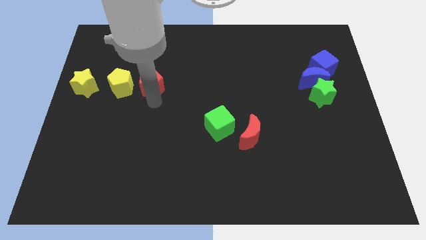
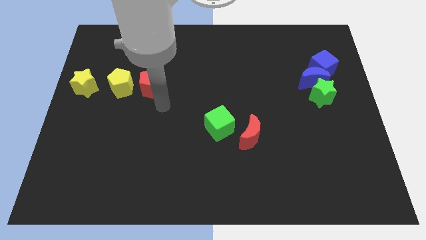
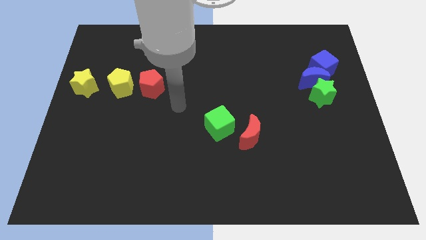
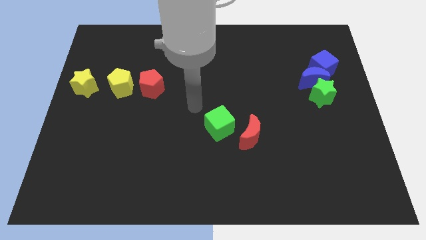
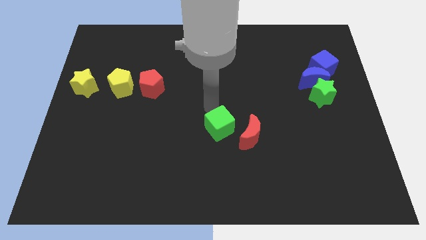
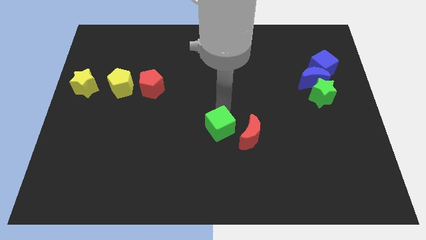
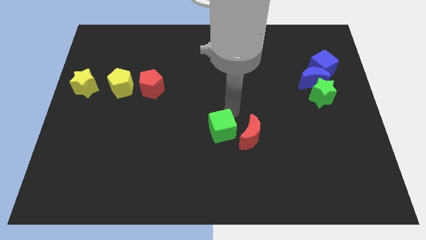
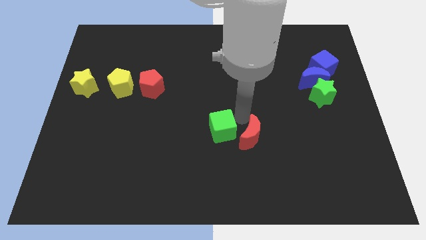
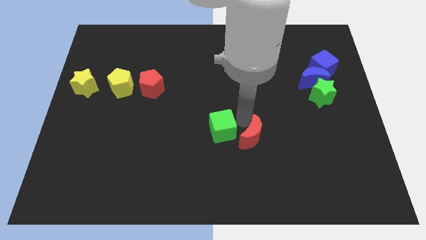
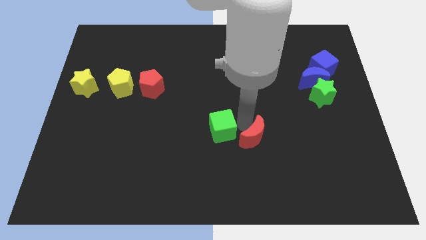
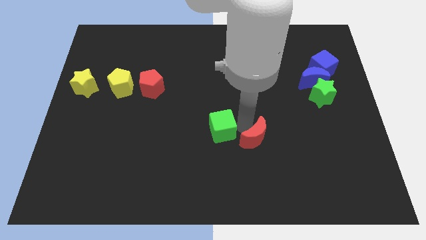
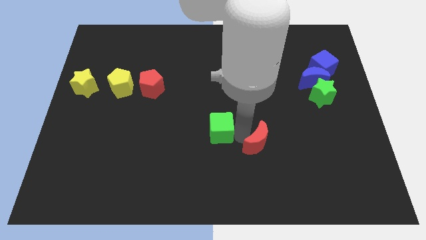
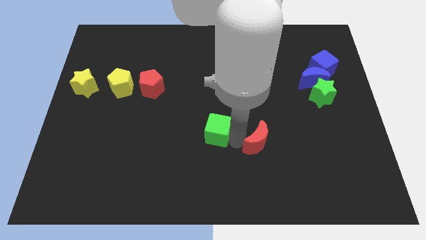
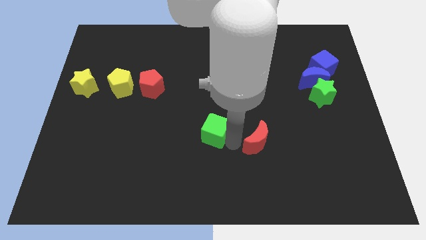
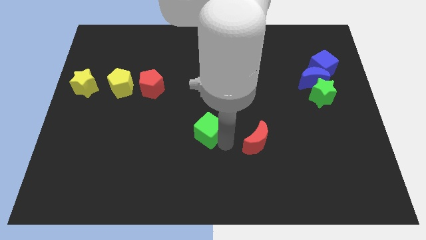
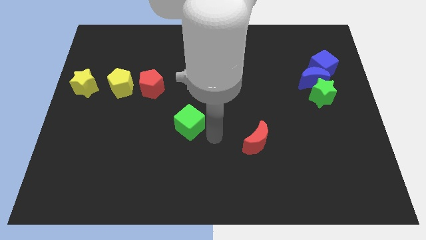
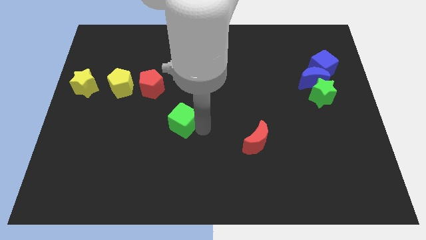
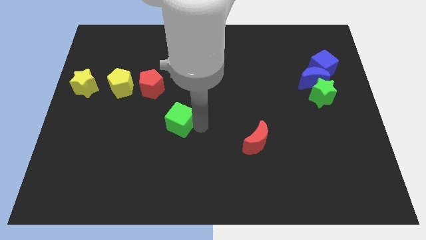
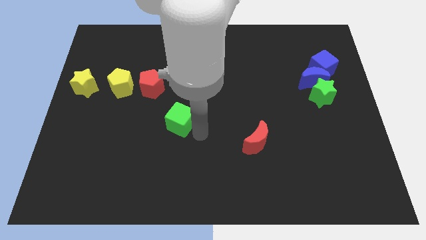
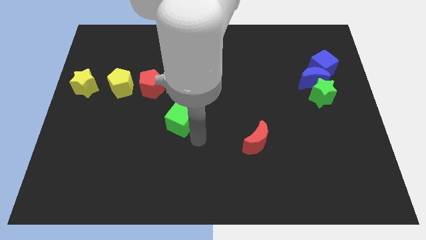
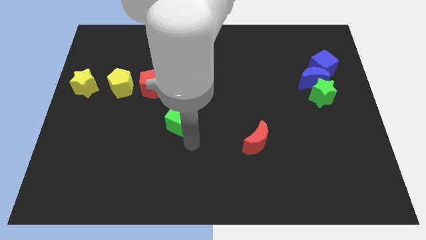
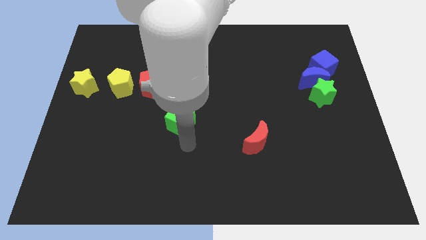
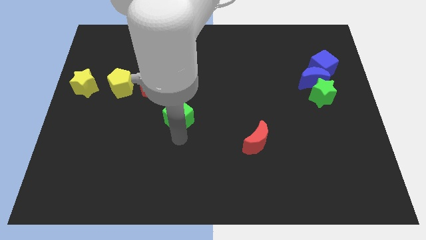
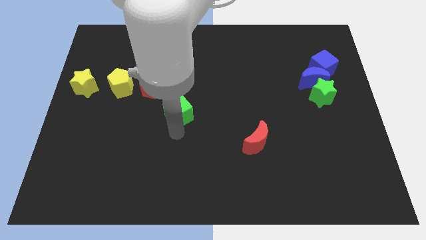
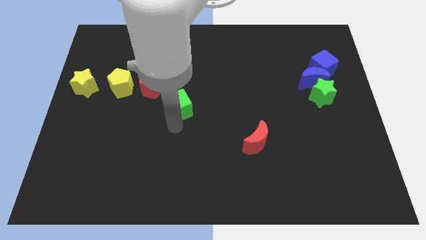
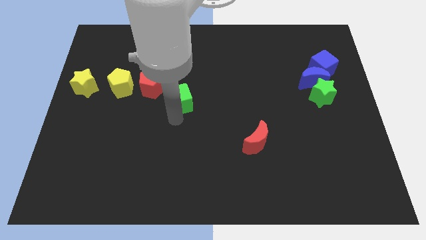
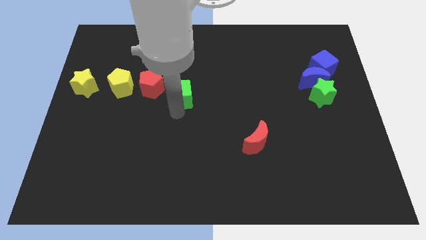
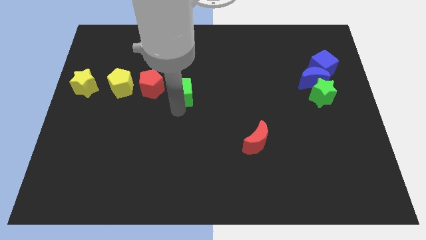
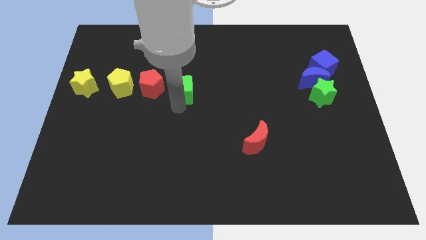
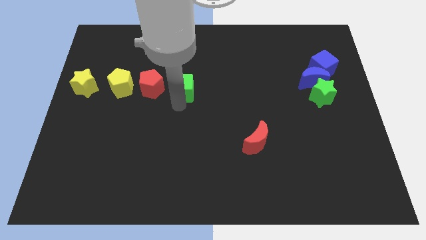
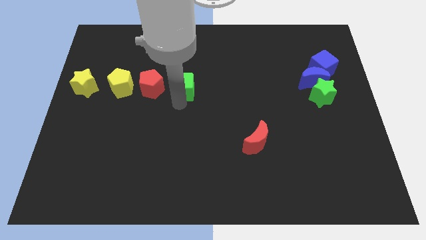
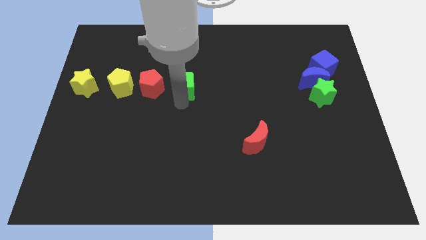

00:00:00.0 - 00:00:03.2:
move the green cube beside the red pentagon

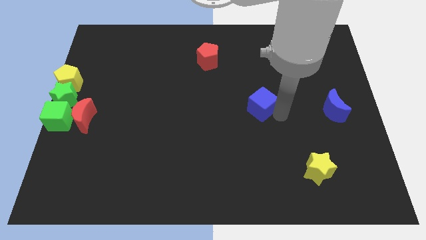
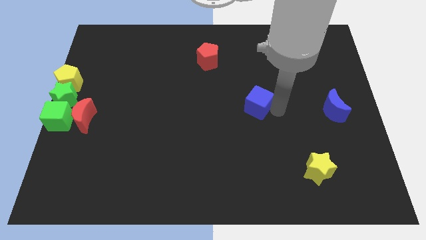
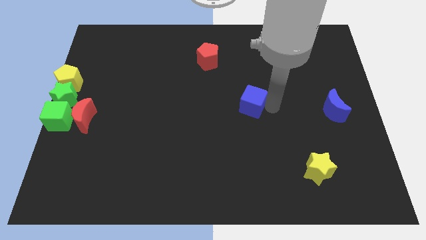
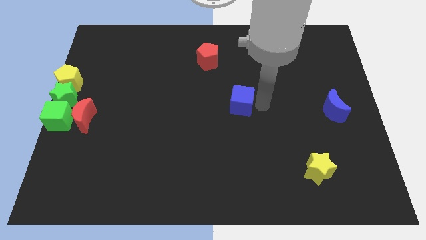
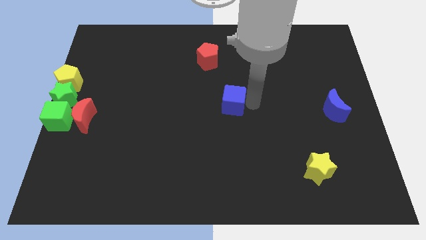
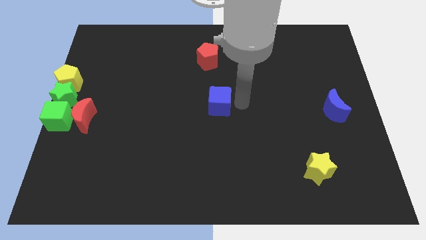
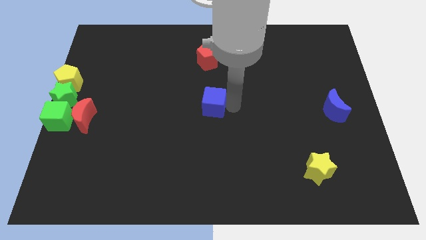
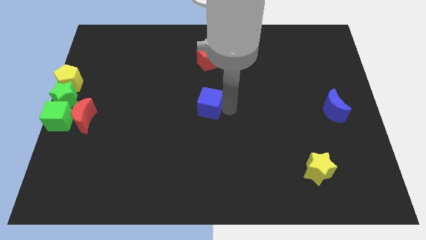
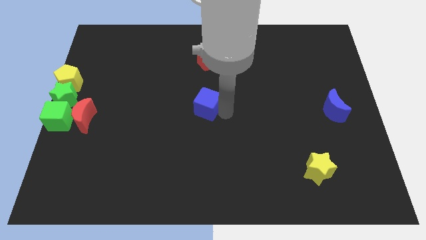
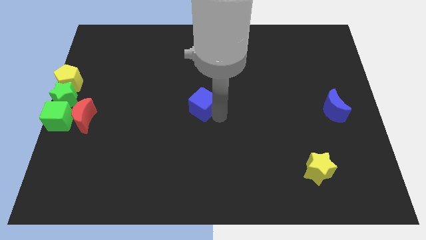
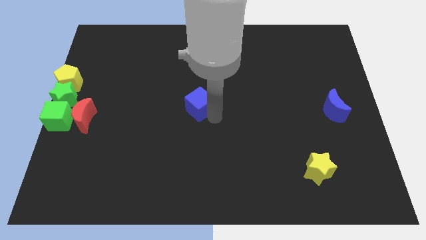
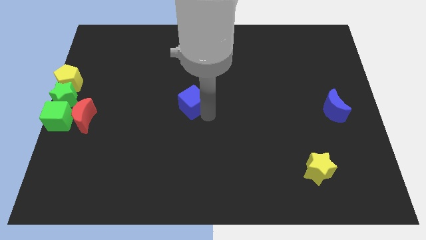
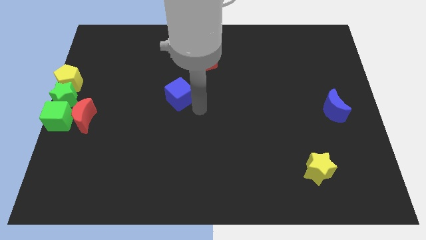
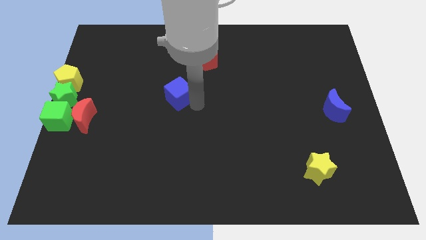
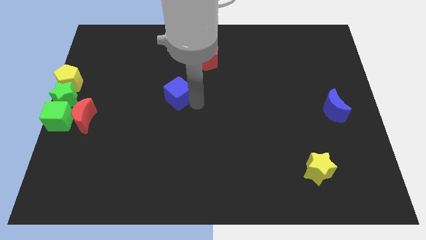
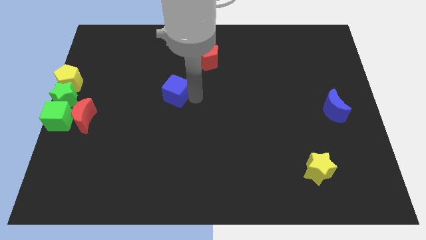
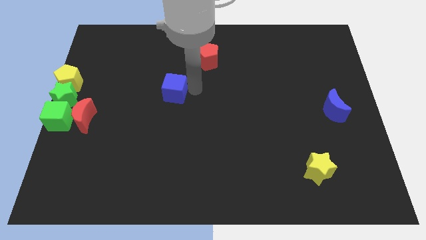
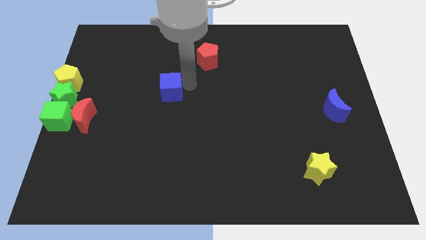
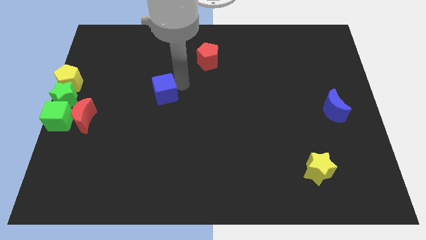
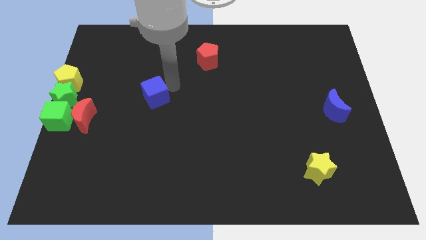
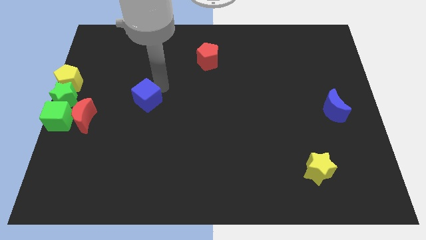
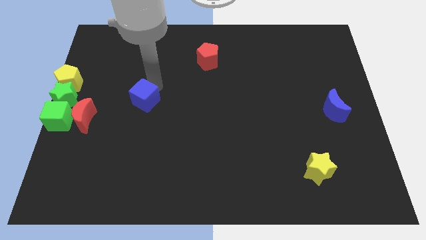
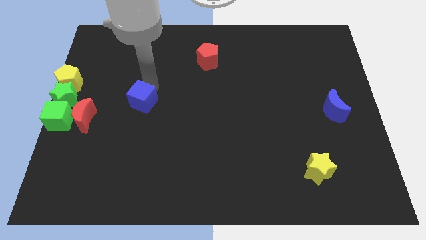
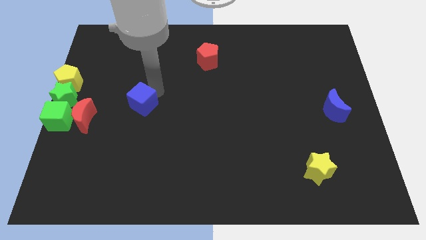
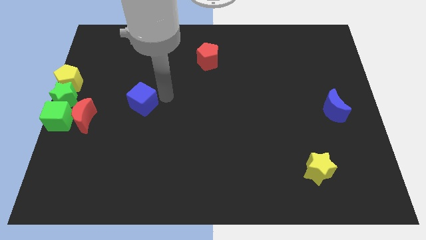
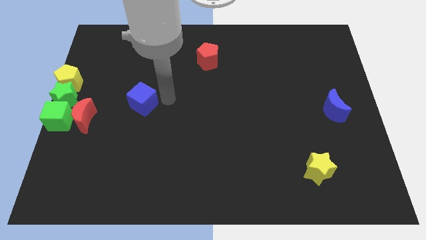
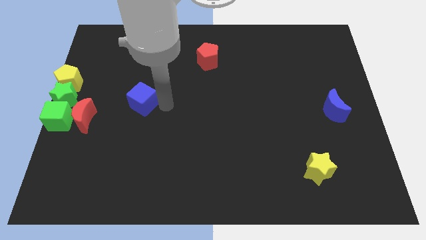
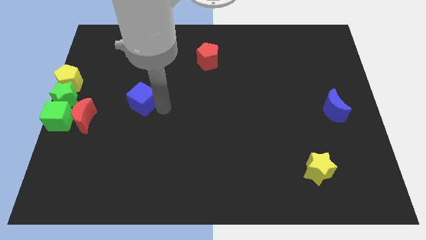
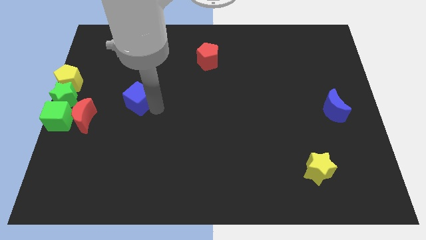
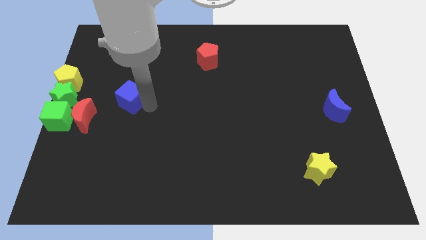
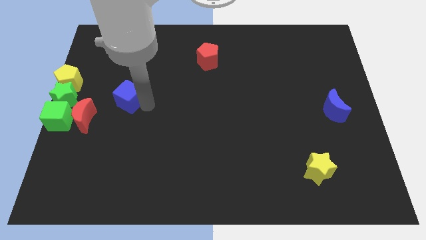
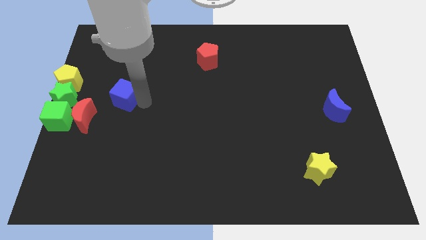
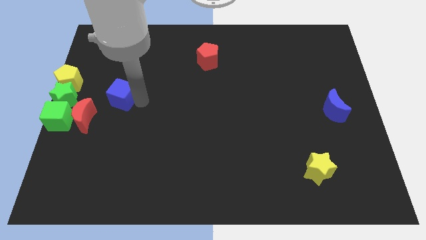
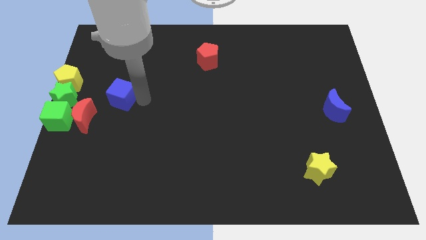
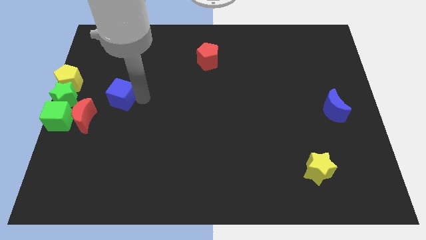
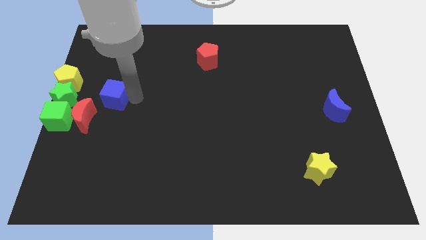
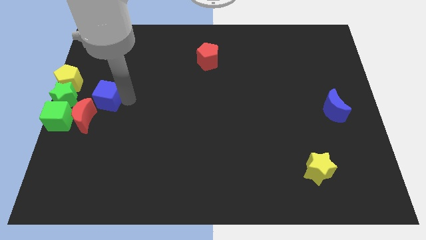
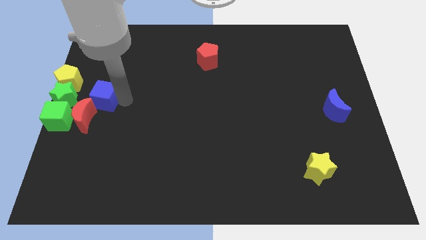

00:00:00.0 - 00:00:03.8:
push the blue cube close to the red moon

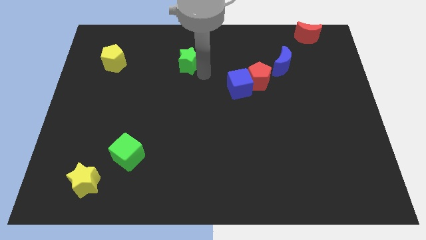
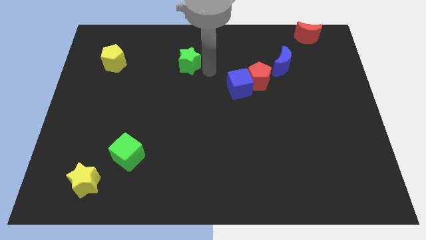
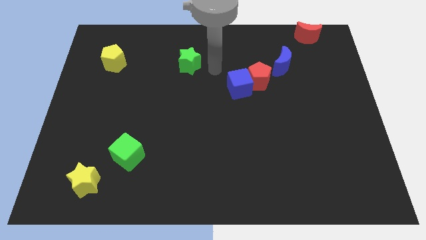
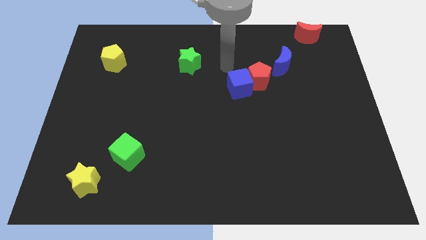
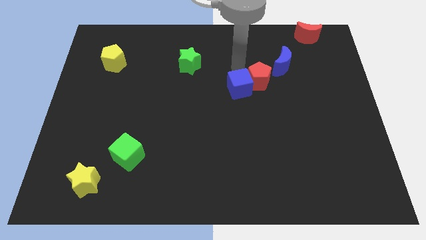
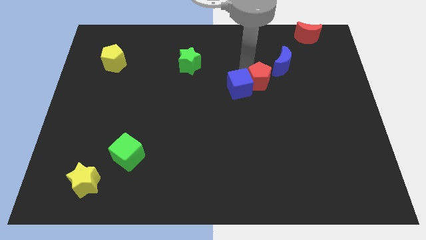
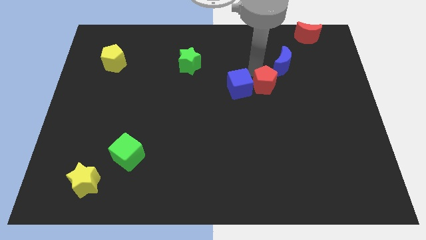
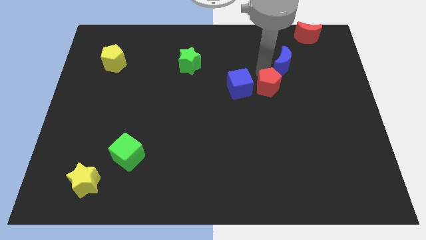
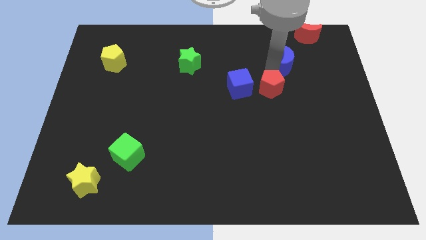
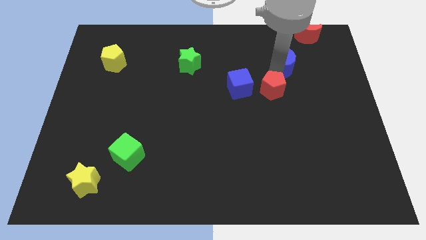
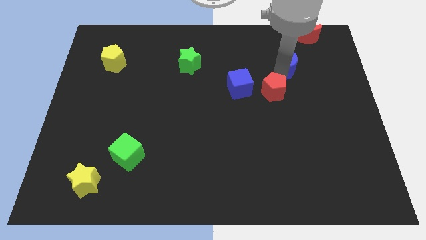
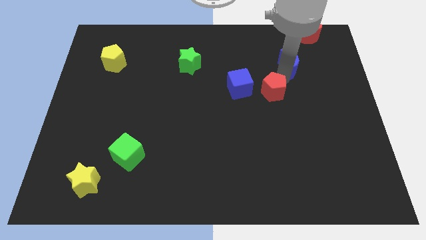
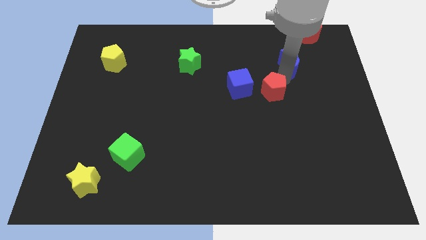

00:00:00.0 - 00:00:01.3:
move the red pentagon to the right side of the blue cube

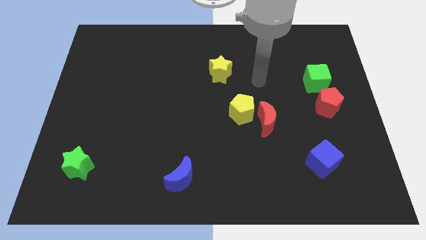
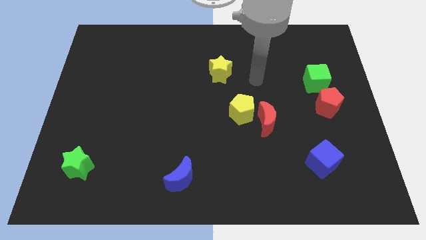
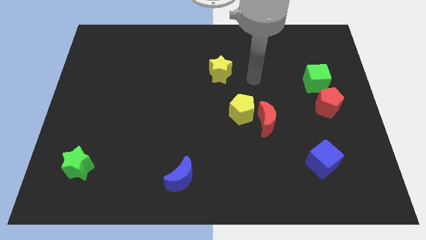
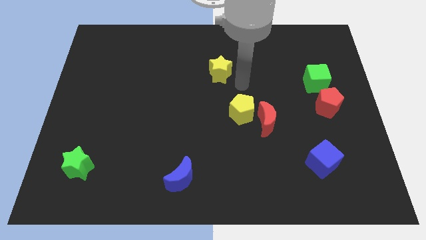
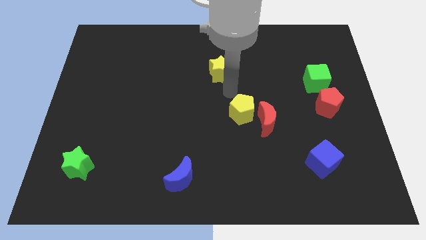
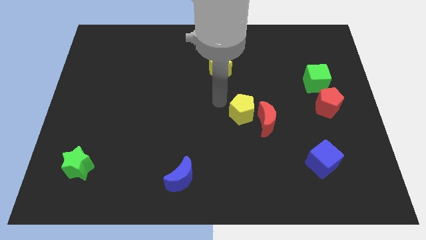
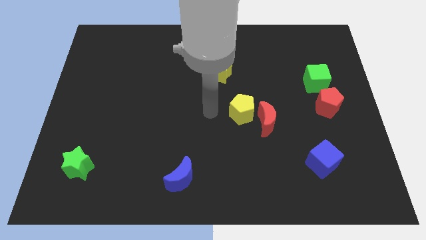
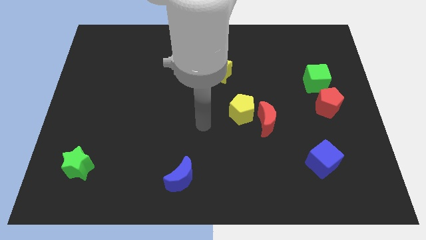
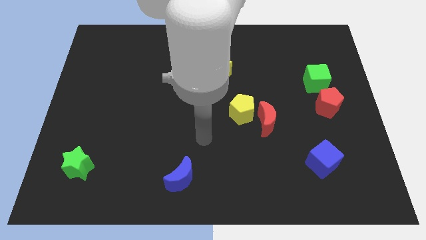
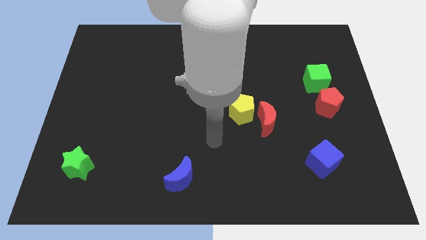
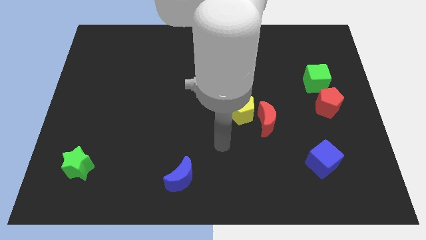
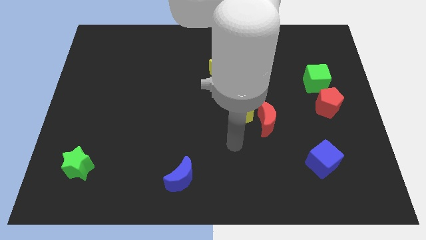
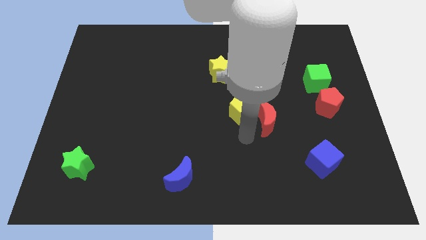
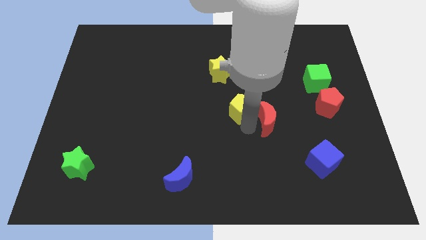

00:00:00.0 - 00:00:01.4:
move your arm to the bottom of the yellow pentagon
